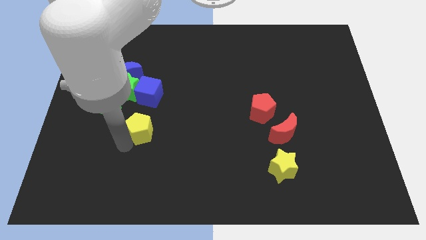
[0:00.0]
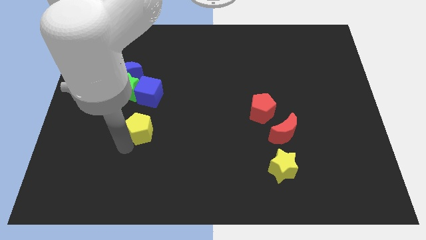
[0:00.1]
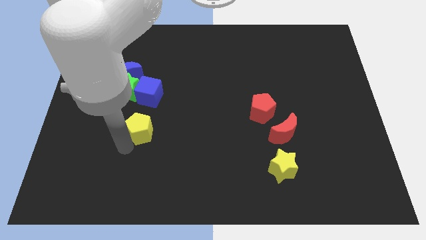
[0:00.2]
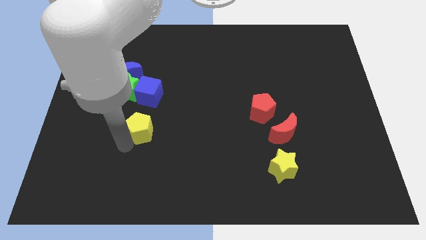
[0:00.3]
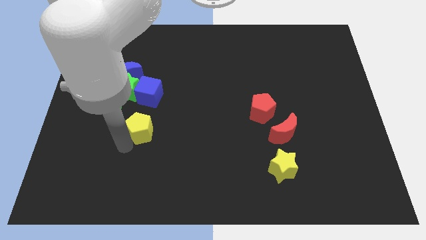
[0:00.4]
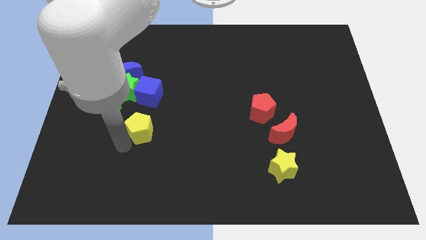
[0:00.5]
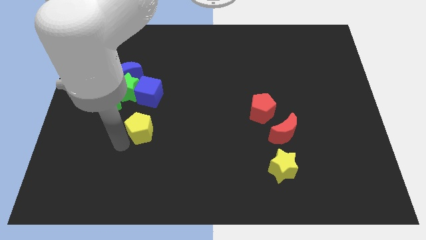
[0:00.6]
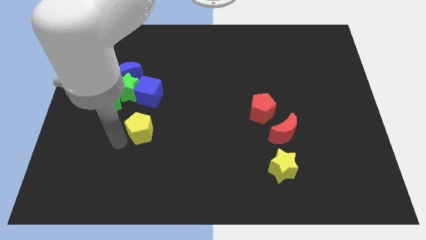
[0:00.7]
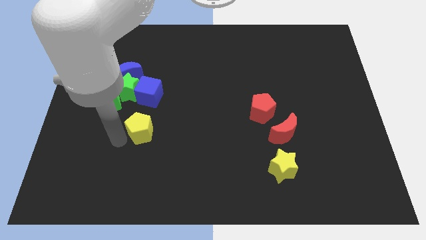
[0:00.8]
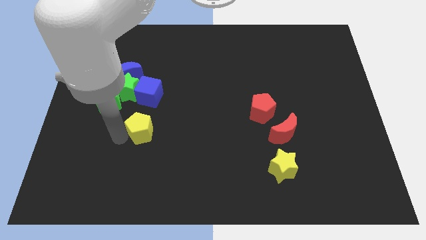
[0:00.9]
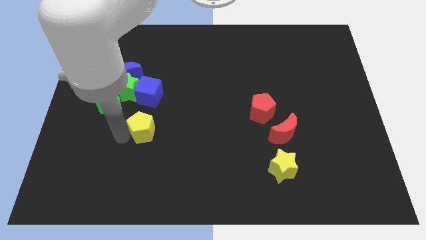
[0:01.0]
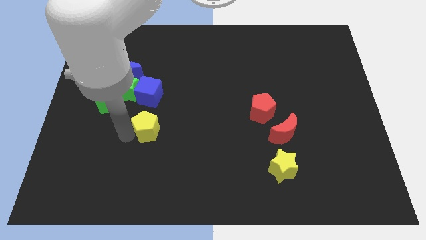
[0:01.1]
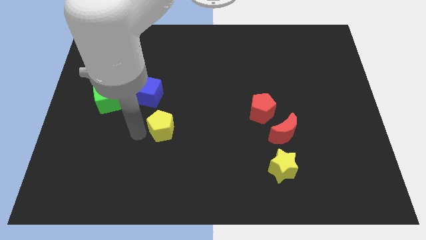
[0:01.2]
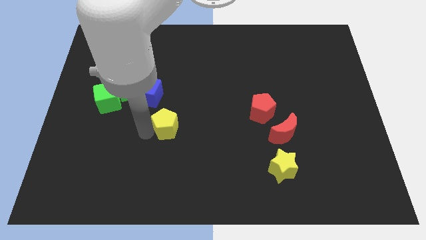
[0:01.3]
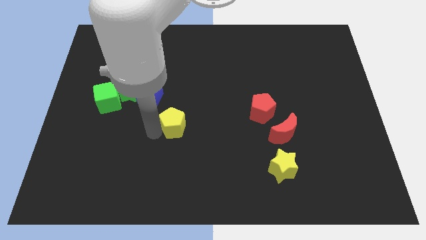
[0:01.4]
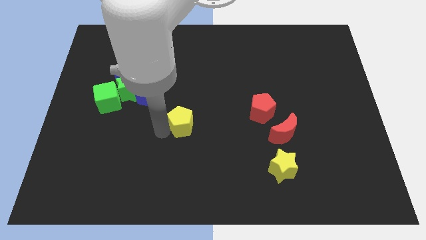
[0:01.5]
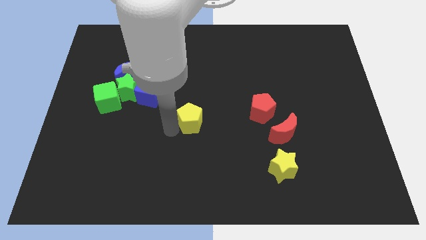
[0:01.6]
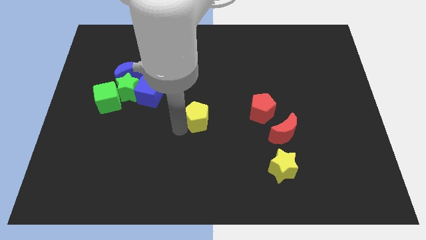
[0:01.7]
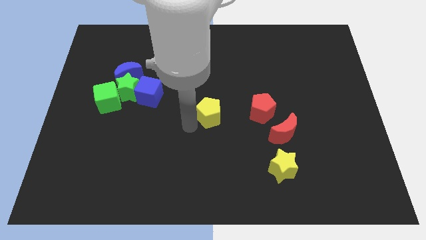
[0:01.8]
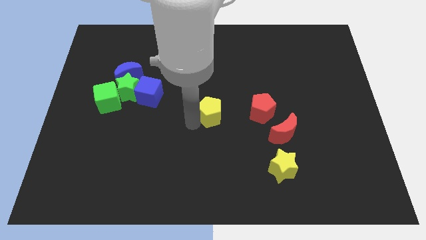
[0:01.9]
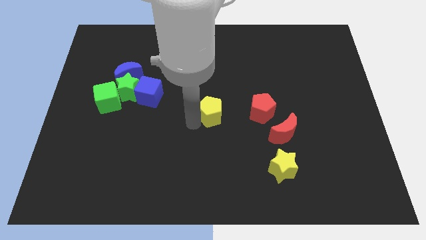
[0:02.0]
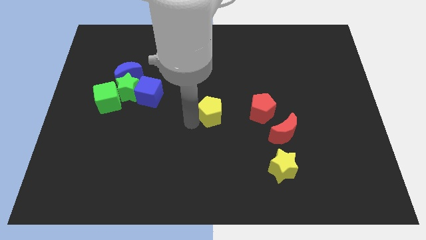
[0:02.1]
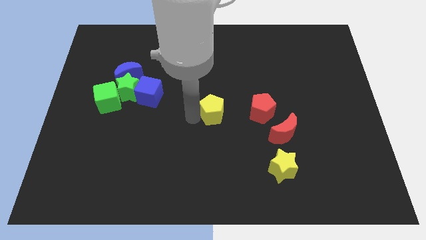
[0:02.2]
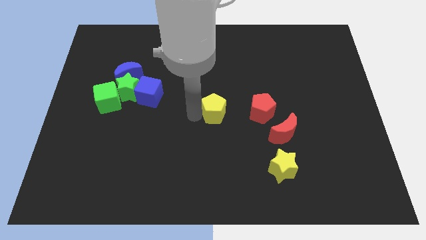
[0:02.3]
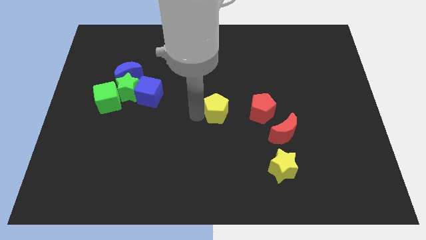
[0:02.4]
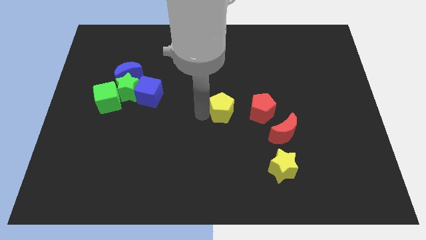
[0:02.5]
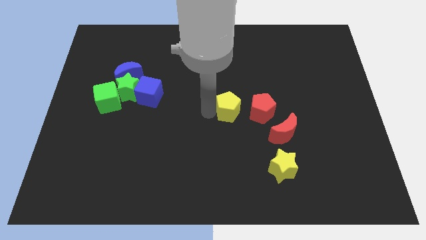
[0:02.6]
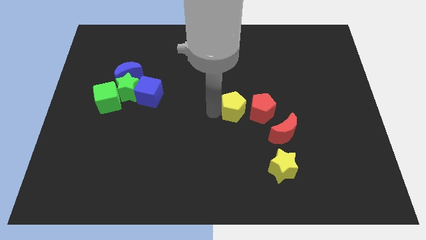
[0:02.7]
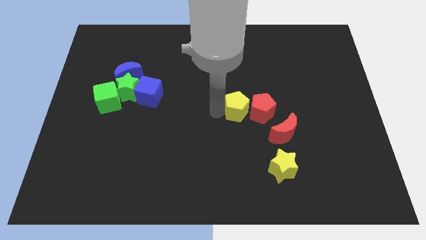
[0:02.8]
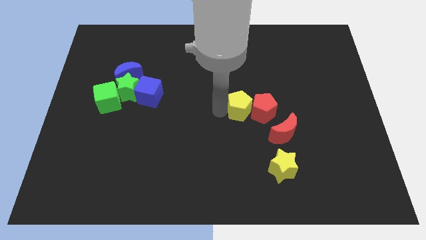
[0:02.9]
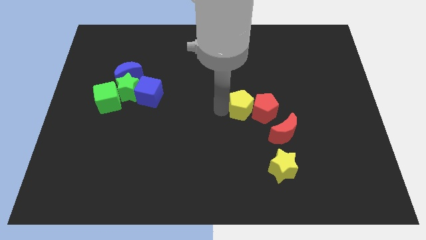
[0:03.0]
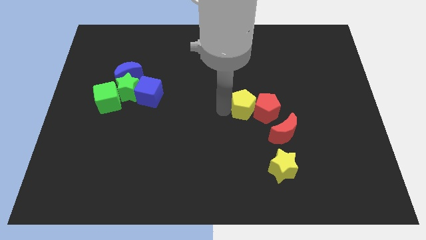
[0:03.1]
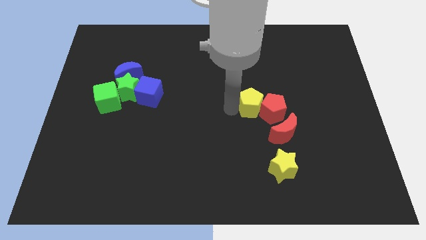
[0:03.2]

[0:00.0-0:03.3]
move the yellow pentagon to the left of the red pentagon

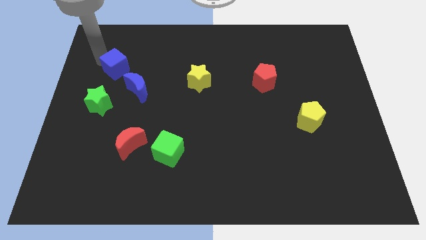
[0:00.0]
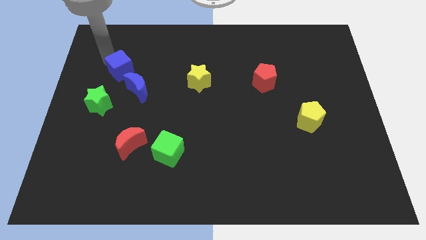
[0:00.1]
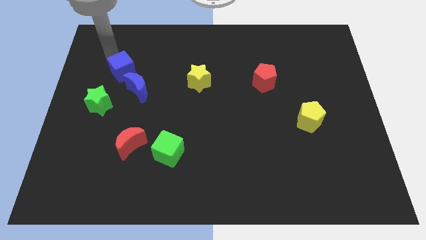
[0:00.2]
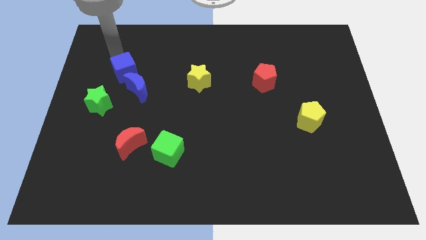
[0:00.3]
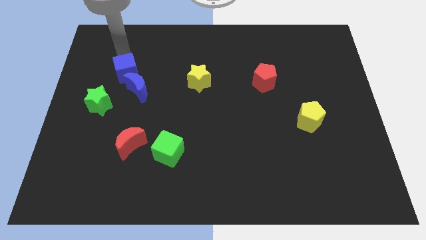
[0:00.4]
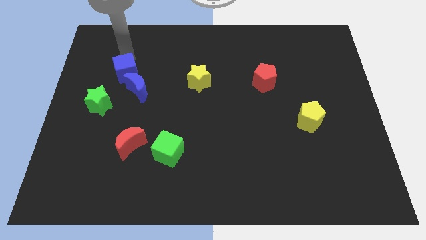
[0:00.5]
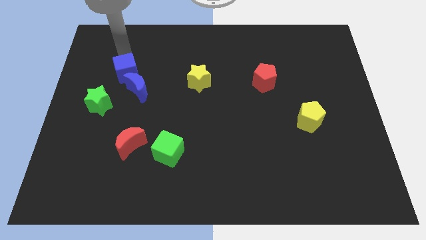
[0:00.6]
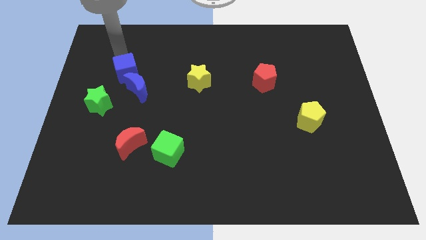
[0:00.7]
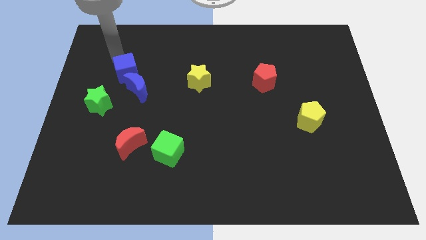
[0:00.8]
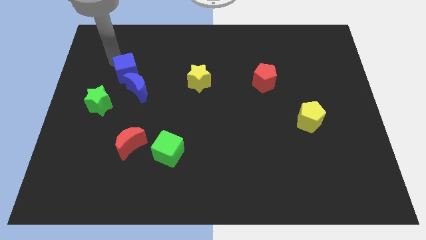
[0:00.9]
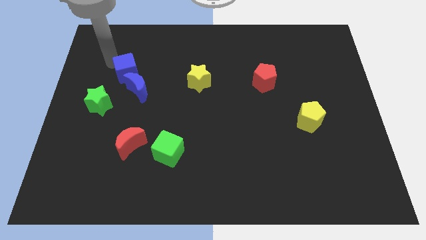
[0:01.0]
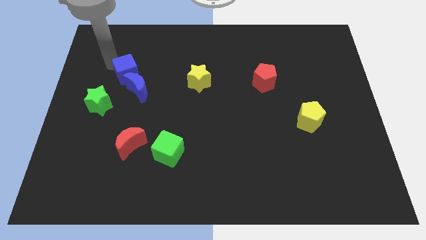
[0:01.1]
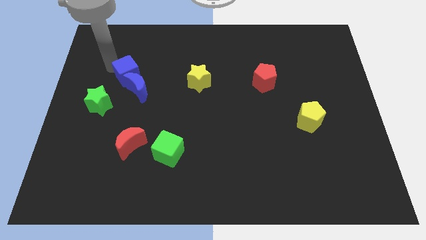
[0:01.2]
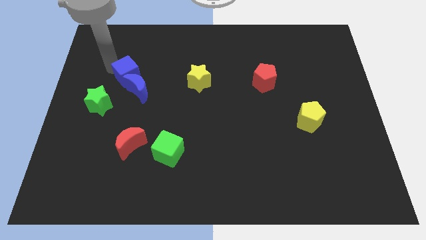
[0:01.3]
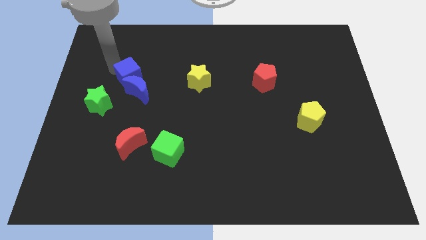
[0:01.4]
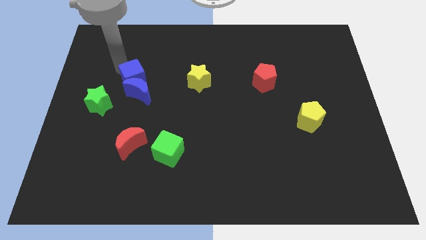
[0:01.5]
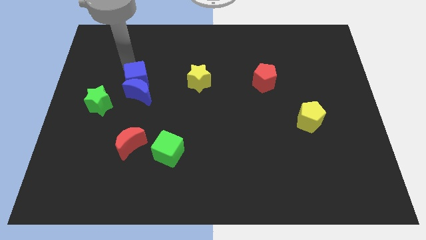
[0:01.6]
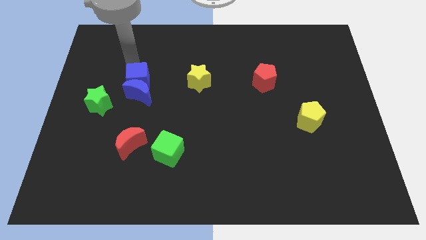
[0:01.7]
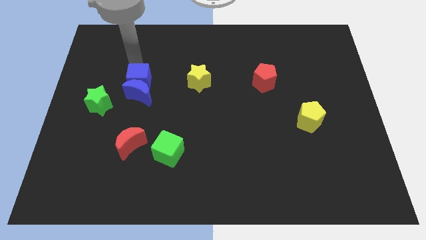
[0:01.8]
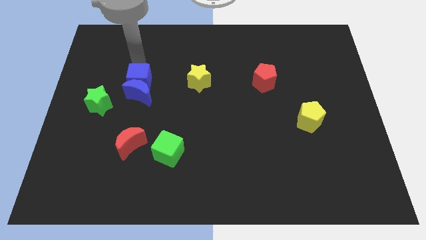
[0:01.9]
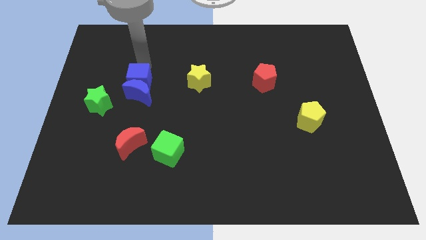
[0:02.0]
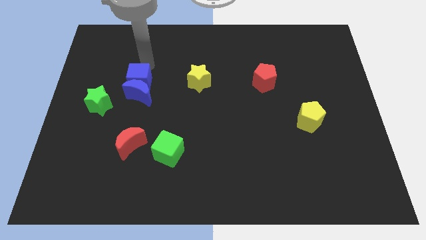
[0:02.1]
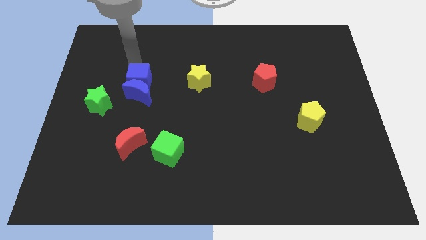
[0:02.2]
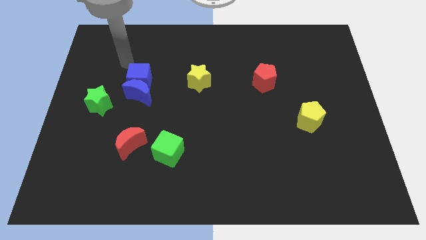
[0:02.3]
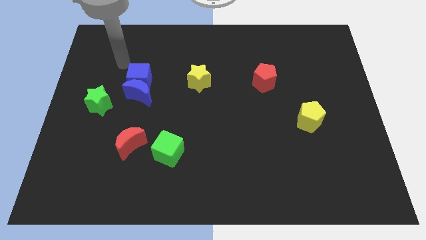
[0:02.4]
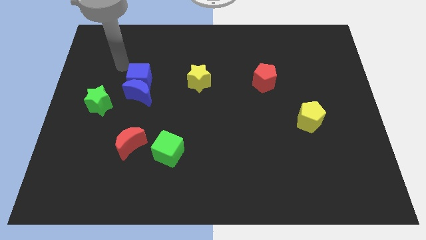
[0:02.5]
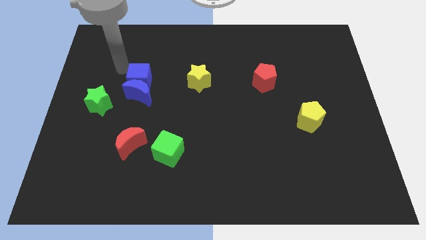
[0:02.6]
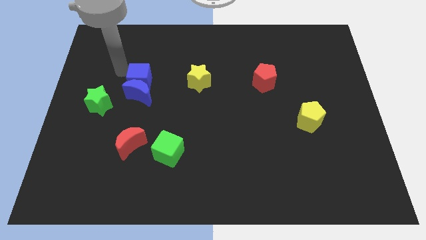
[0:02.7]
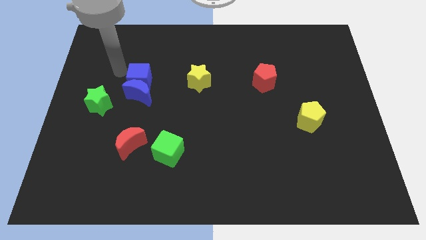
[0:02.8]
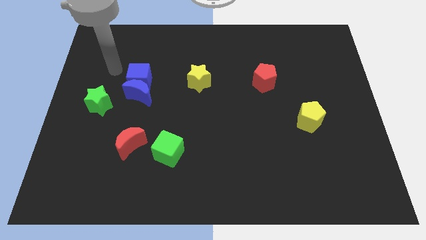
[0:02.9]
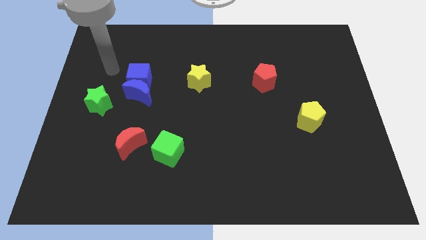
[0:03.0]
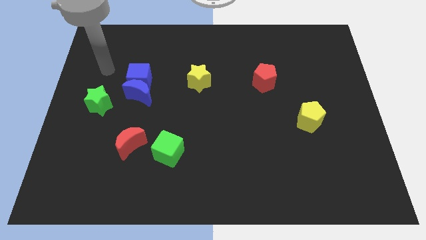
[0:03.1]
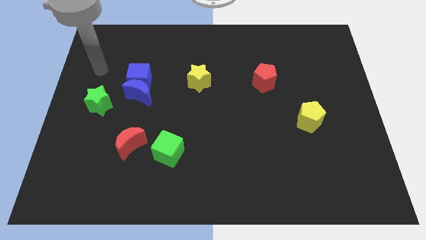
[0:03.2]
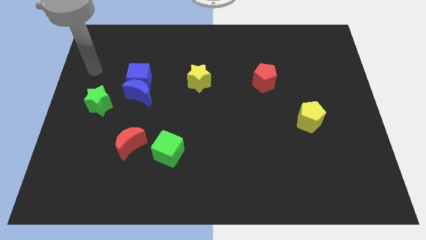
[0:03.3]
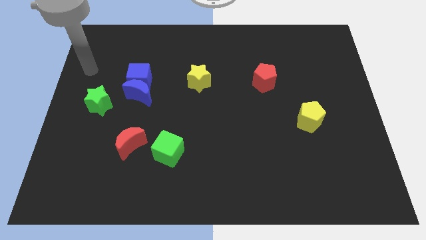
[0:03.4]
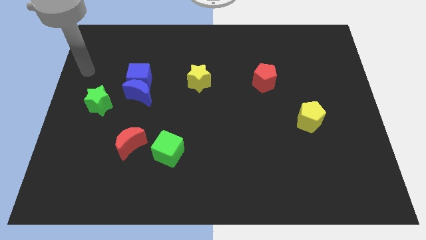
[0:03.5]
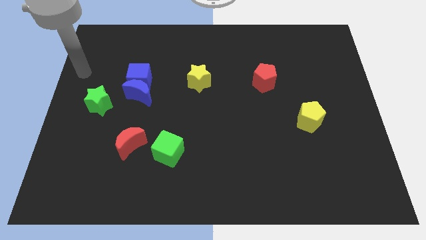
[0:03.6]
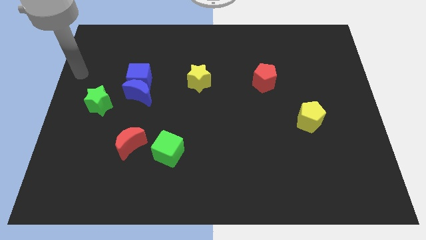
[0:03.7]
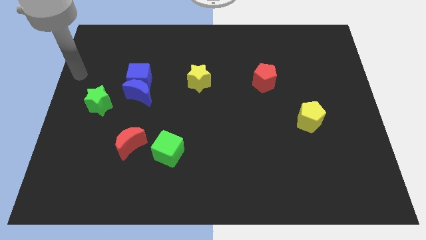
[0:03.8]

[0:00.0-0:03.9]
push blue cube and blue moon together

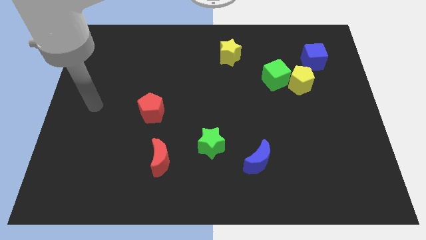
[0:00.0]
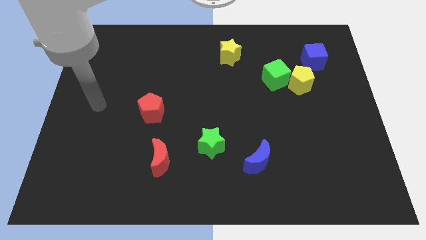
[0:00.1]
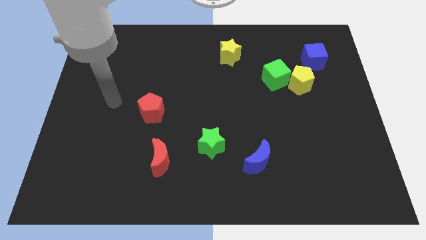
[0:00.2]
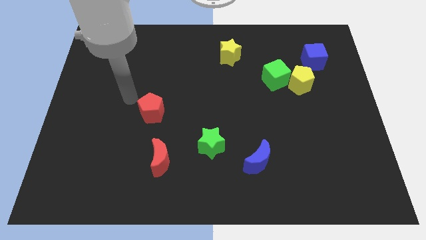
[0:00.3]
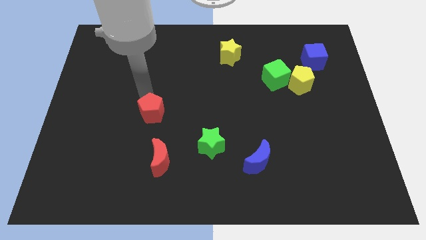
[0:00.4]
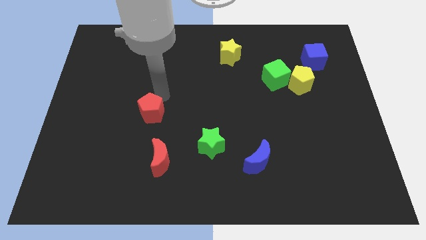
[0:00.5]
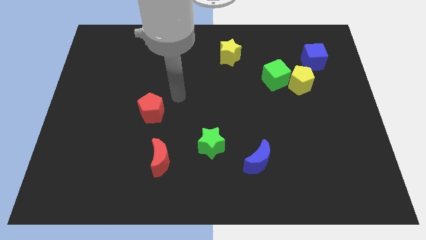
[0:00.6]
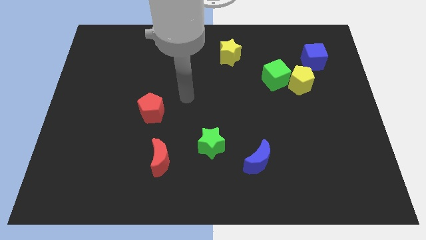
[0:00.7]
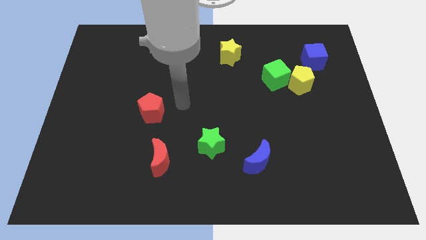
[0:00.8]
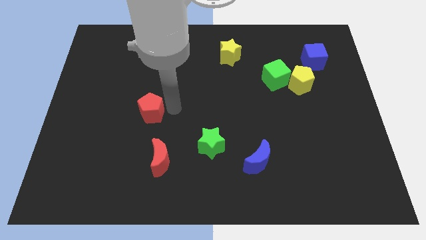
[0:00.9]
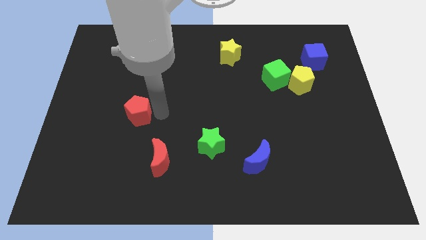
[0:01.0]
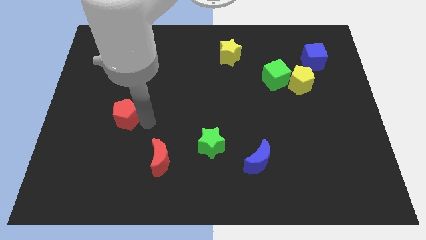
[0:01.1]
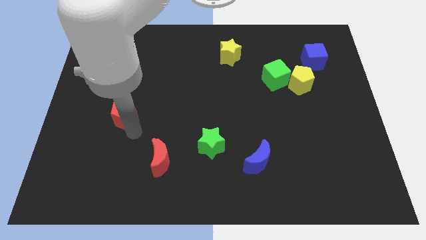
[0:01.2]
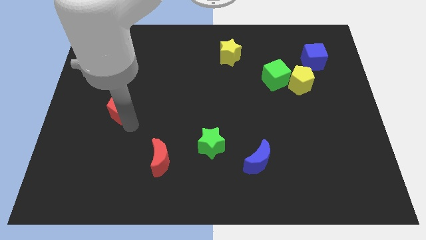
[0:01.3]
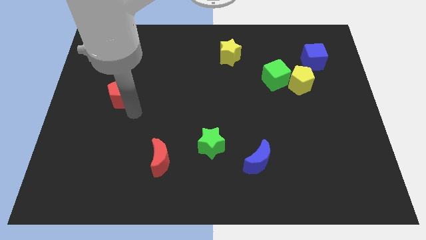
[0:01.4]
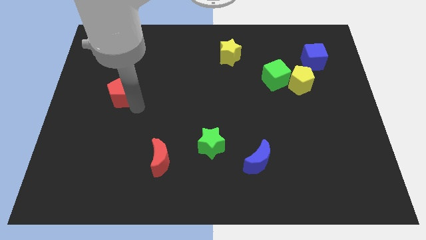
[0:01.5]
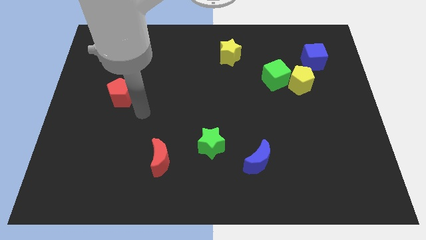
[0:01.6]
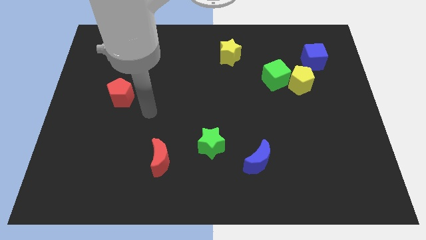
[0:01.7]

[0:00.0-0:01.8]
move red pentagon towards the left center of the board

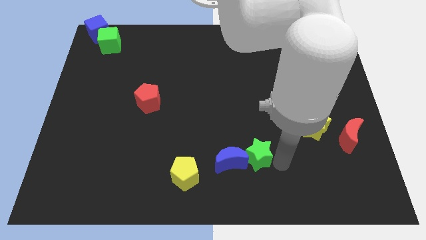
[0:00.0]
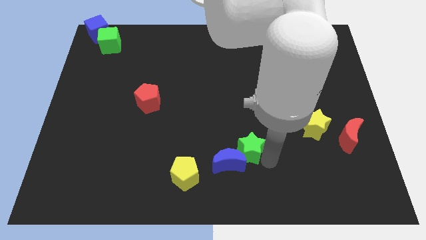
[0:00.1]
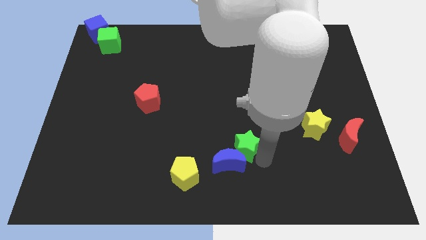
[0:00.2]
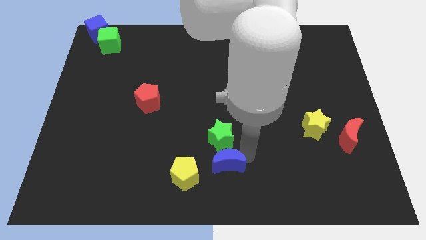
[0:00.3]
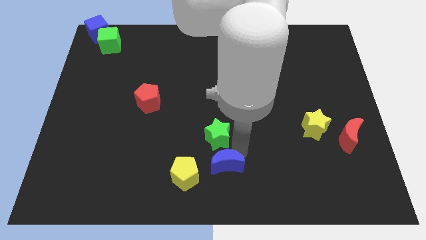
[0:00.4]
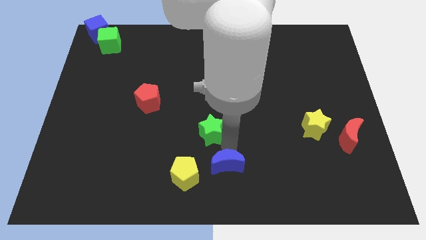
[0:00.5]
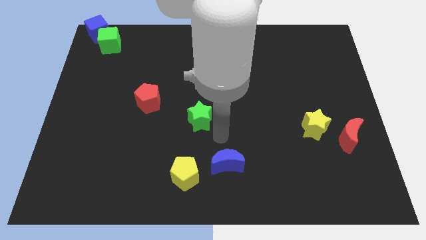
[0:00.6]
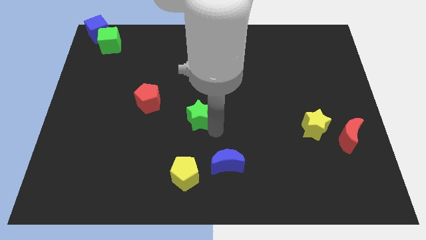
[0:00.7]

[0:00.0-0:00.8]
separate the green star and blue crescent
